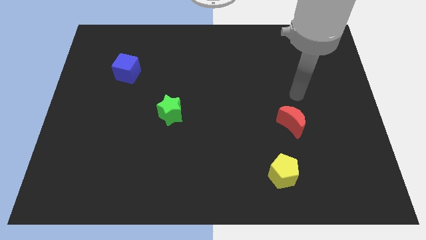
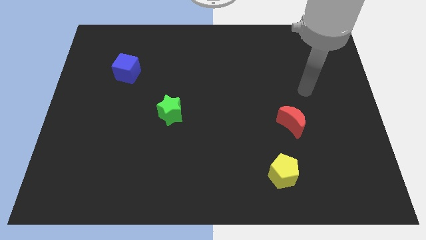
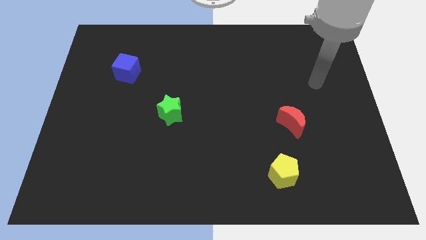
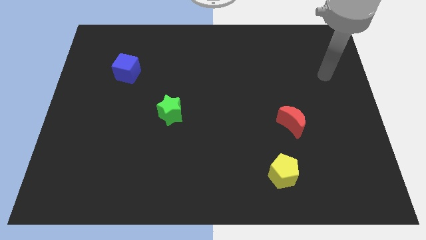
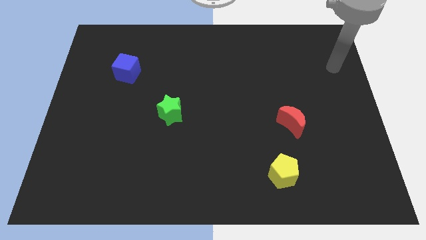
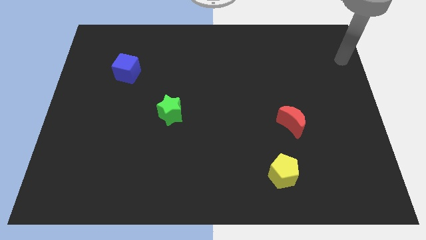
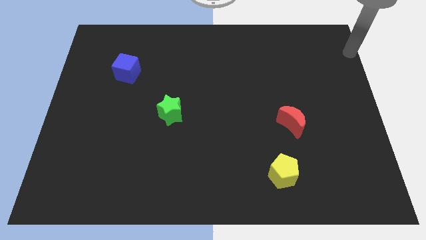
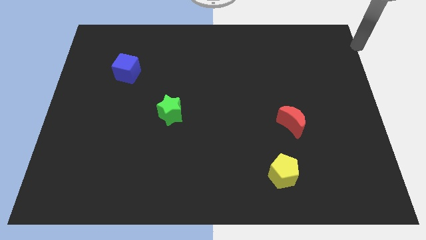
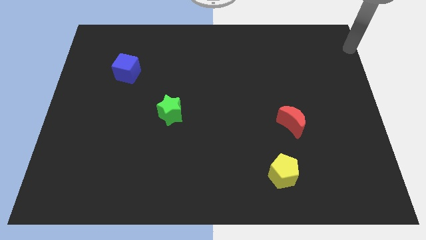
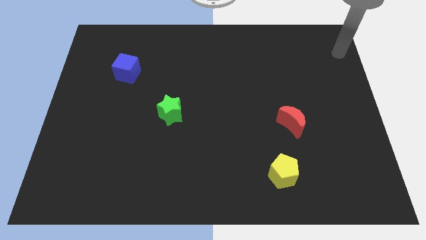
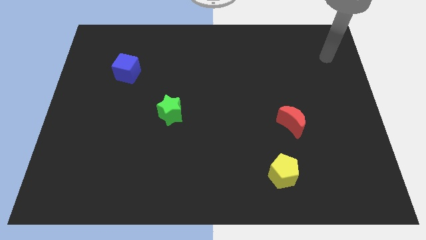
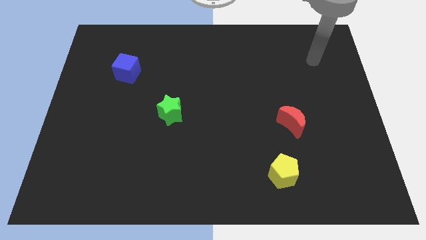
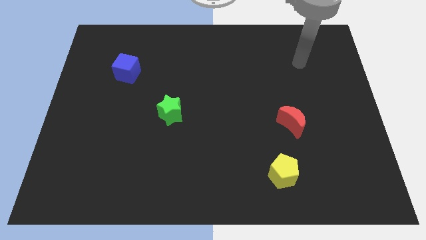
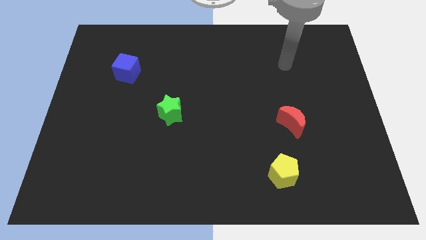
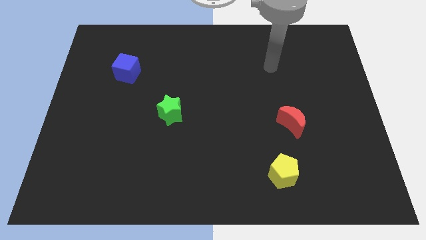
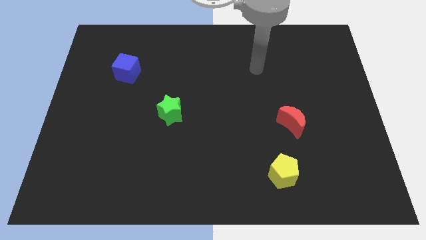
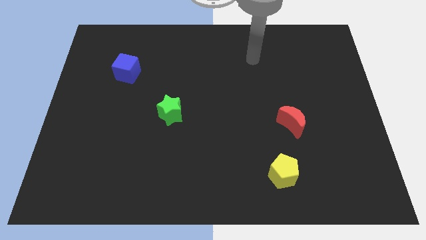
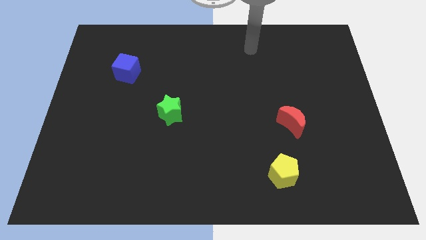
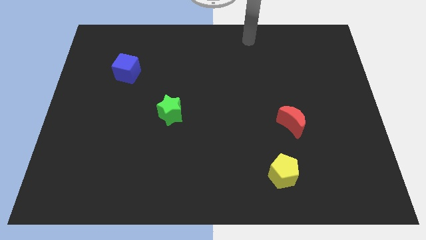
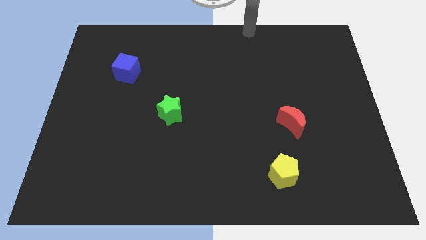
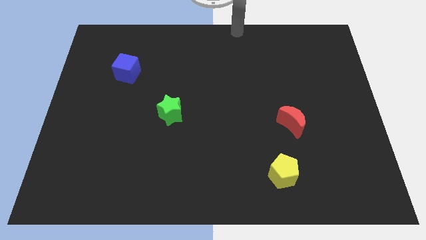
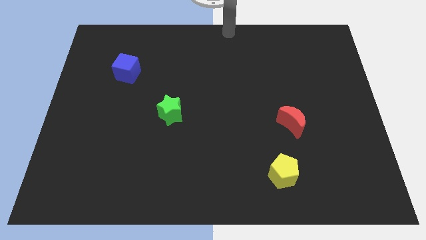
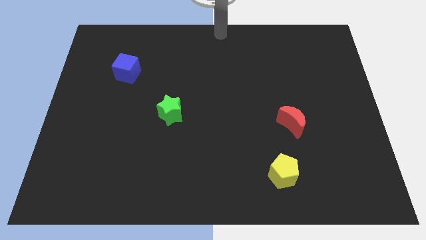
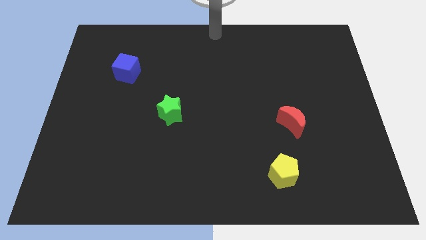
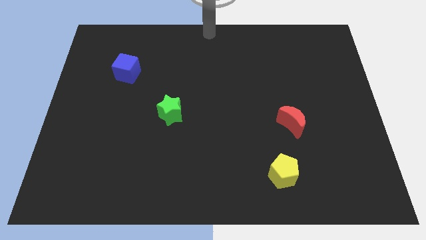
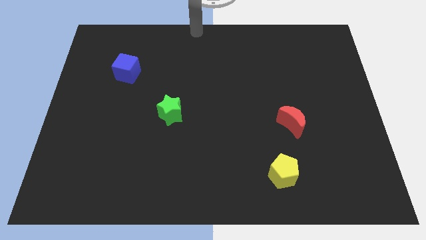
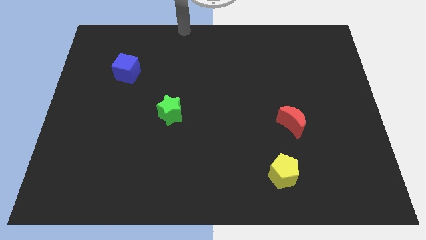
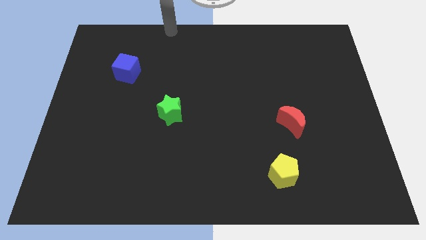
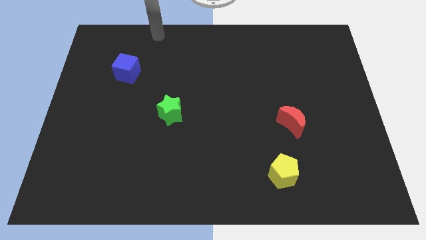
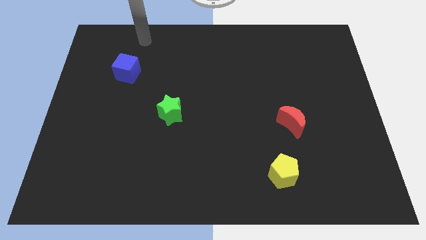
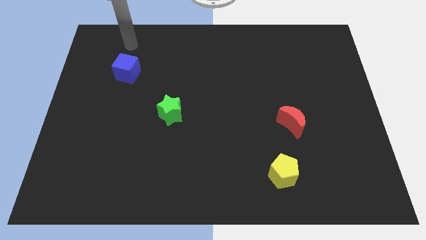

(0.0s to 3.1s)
go and move your arm at the top side of the blue cube

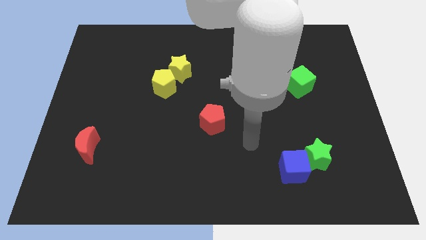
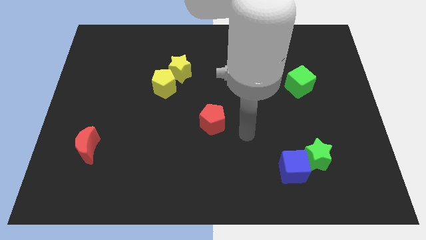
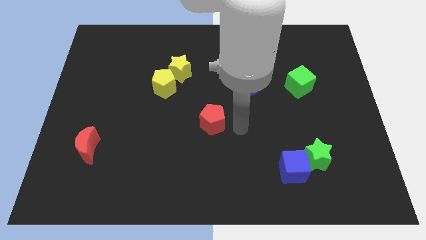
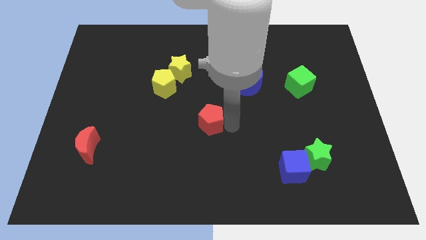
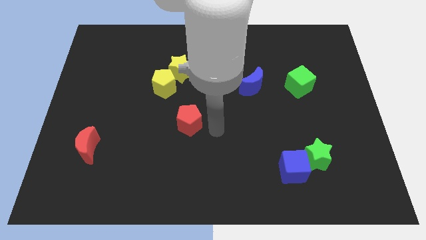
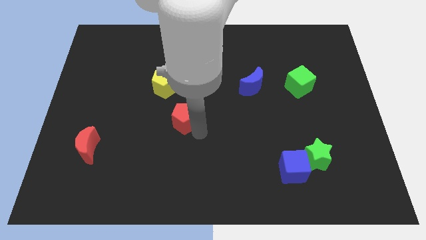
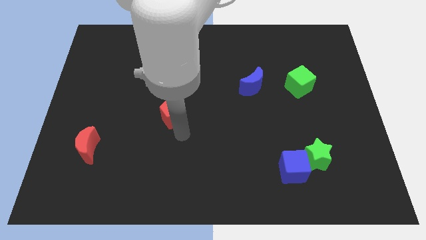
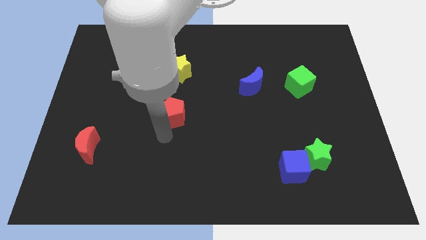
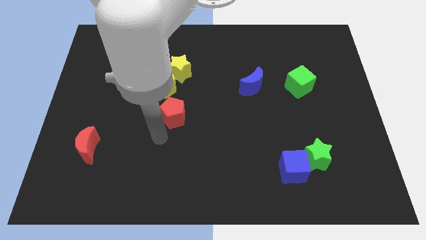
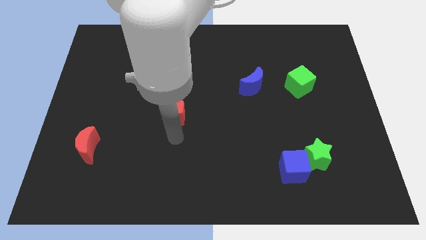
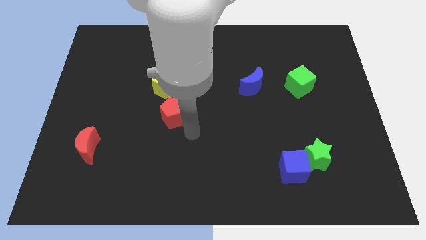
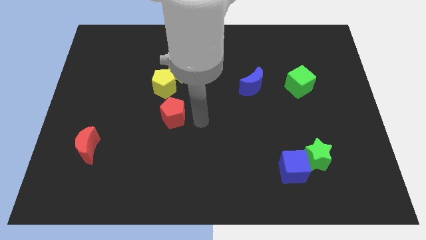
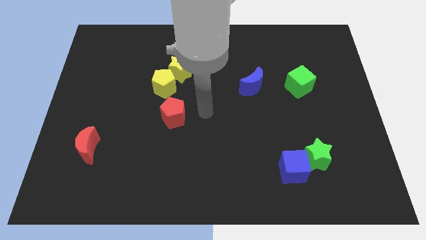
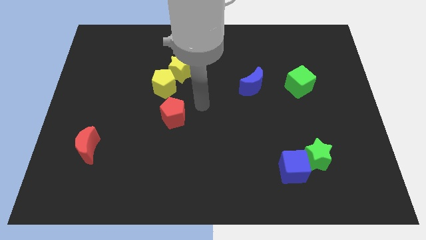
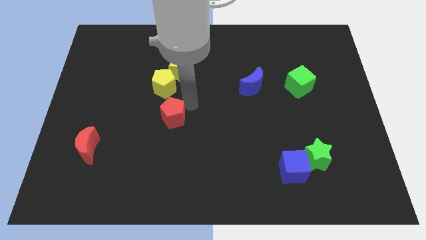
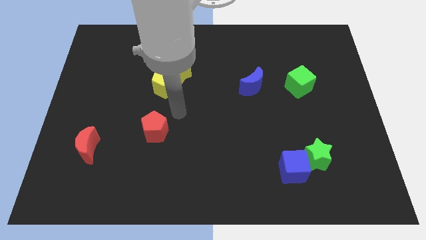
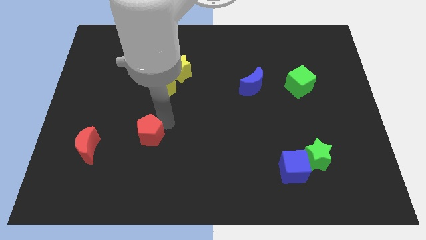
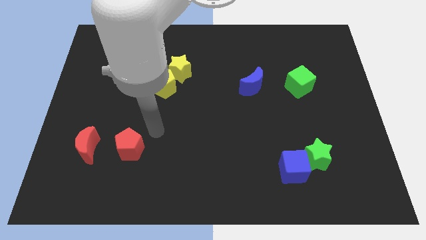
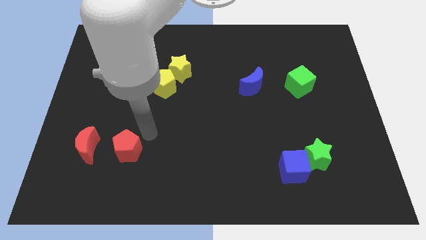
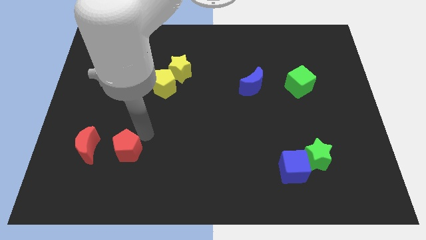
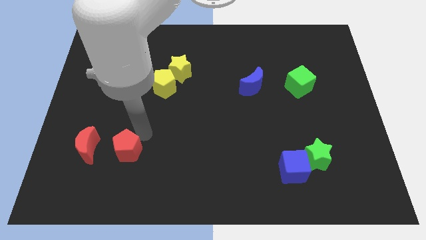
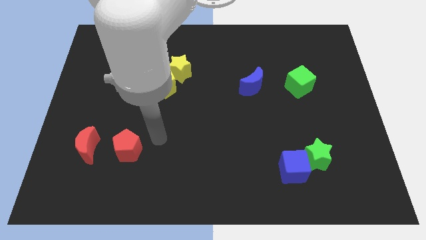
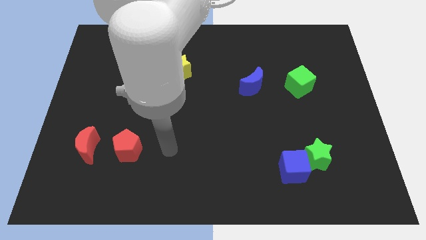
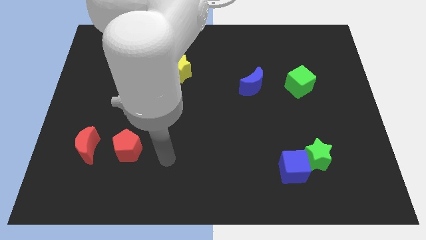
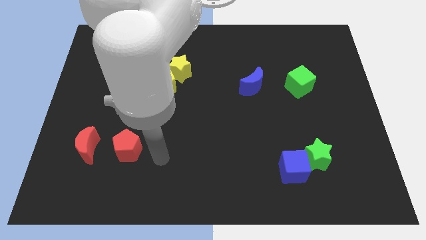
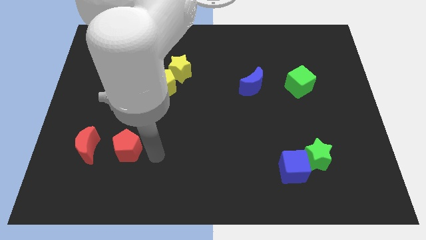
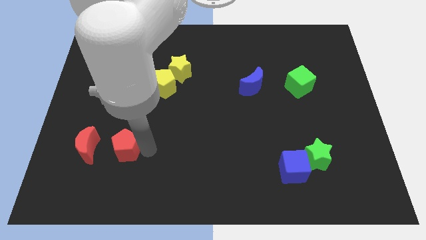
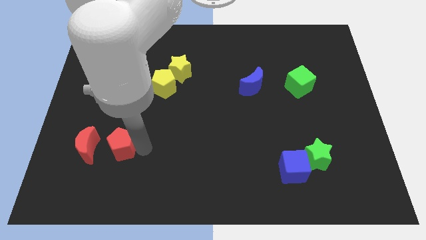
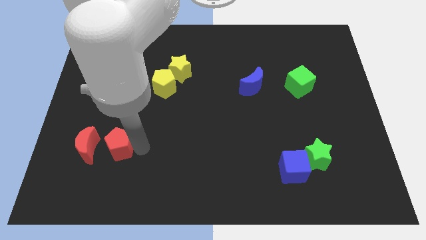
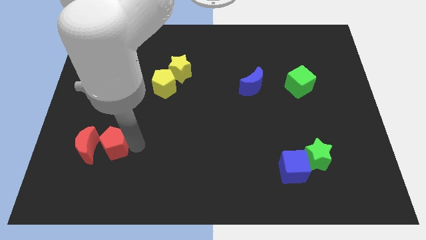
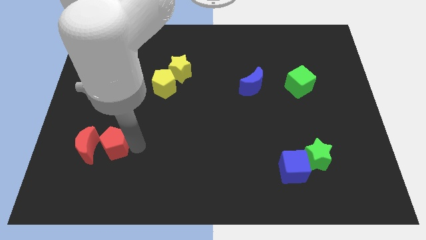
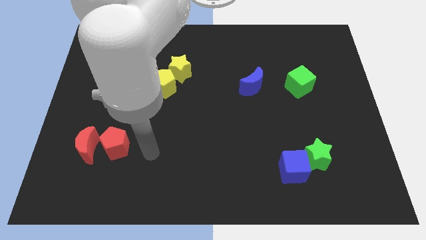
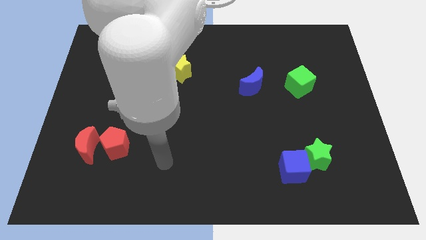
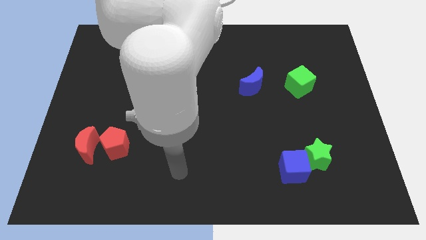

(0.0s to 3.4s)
move the red pentagon to the right of the red moon

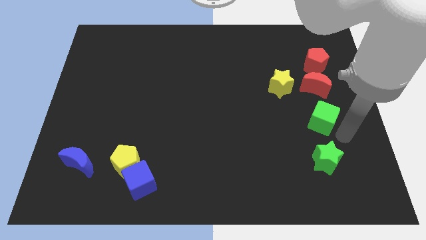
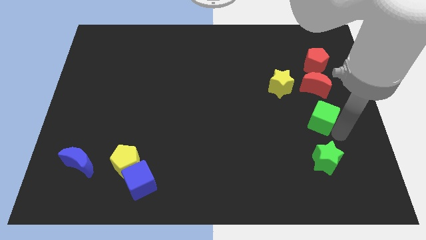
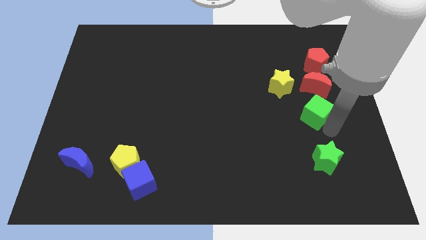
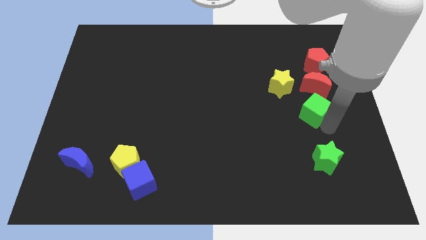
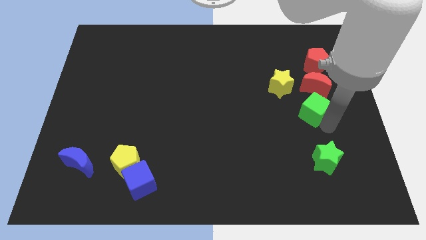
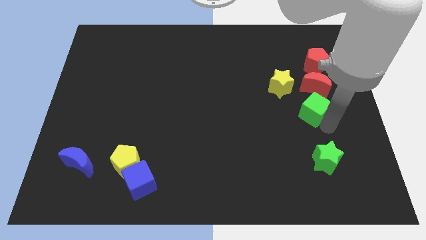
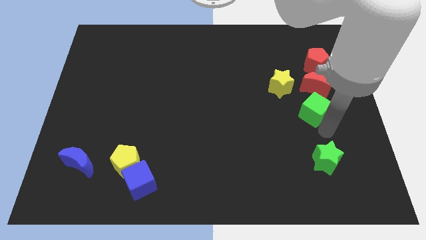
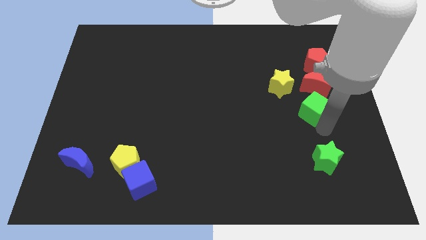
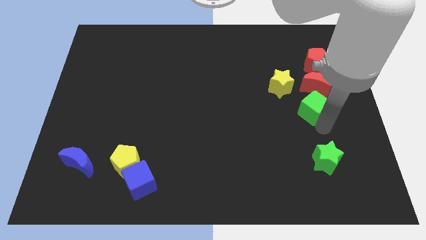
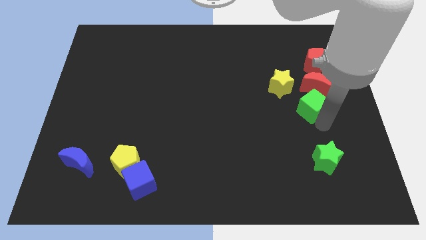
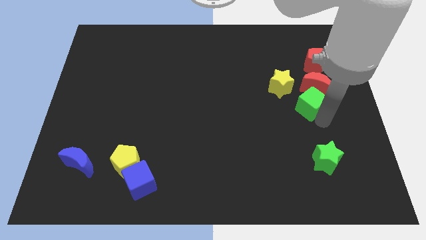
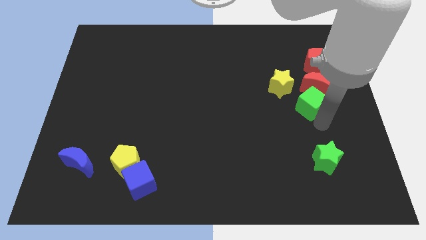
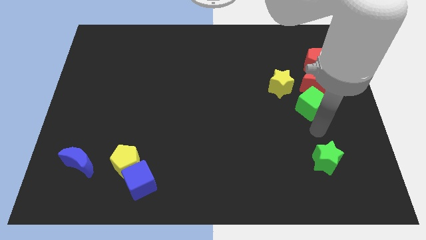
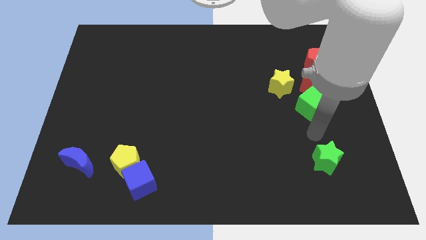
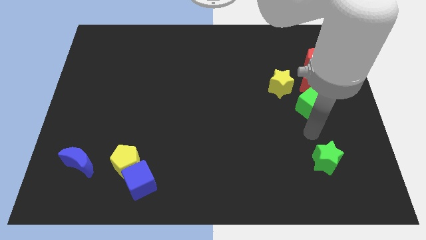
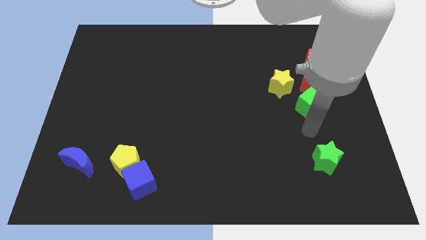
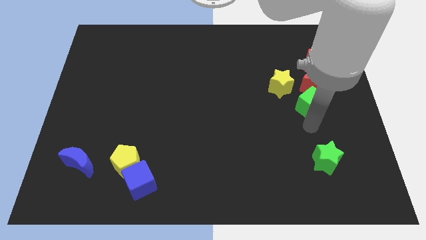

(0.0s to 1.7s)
move the green cube into the red moon

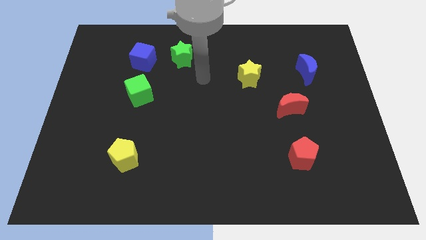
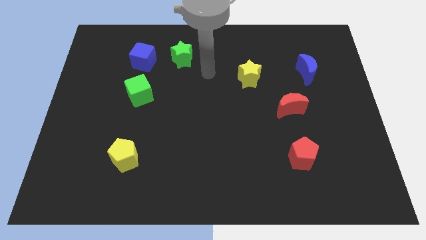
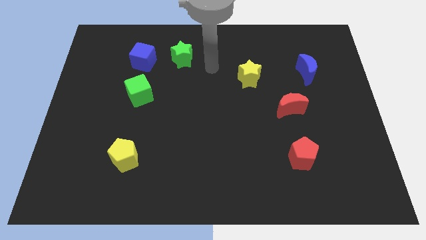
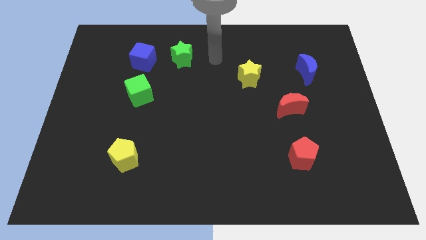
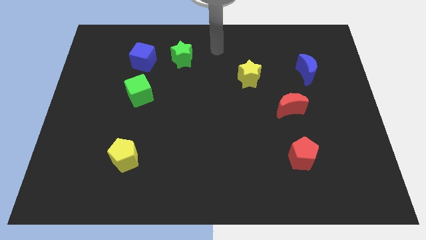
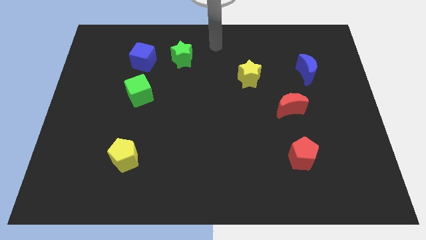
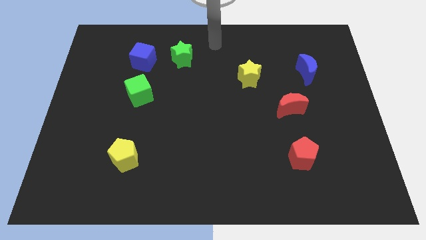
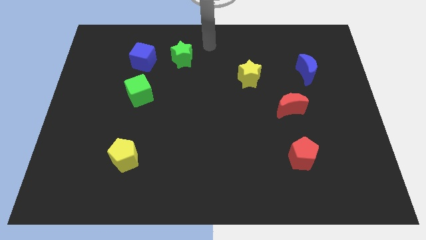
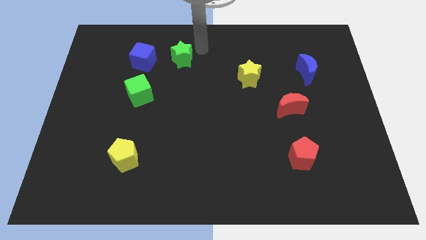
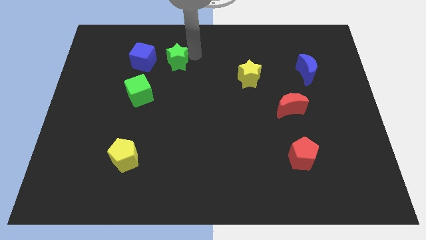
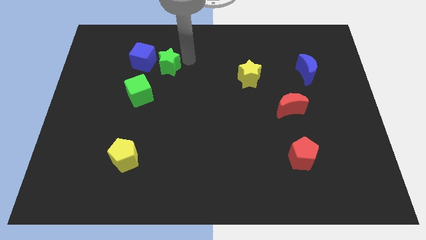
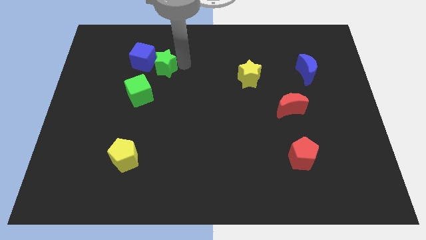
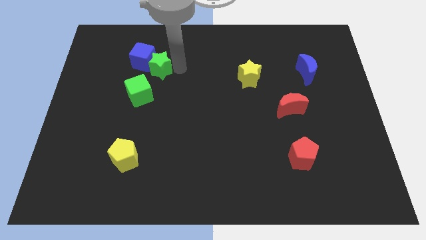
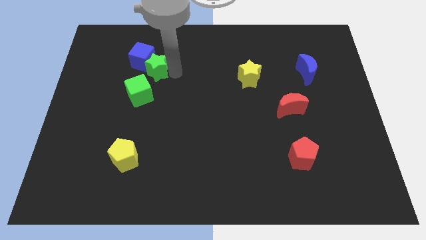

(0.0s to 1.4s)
push the green star into the blue cube
